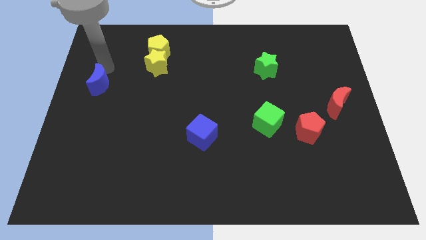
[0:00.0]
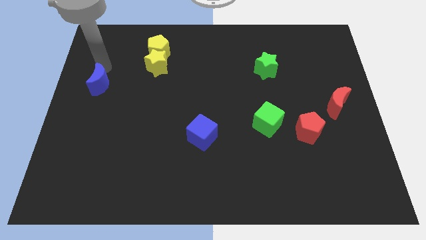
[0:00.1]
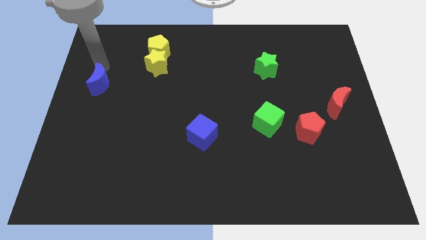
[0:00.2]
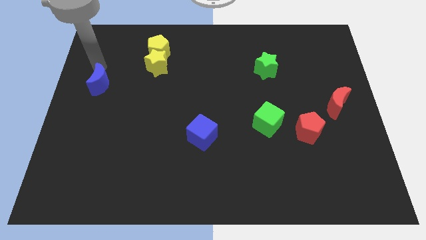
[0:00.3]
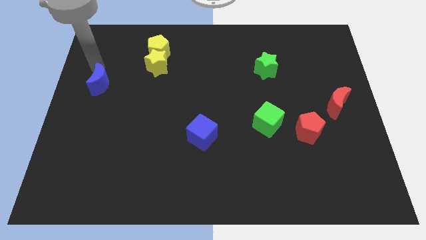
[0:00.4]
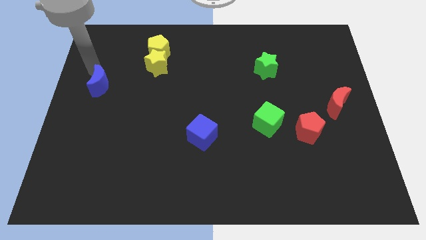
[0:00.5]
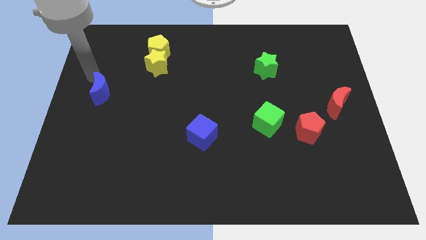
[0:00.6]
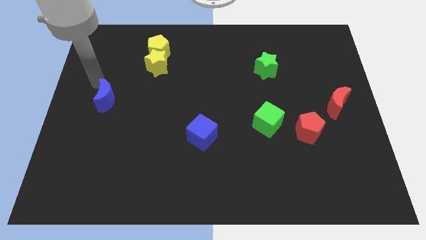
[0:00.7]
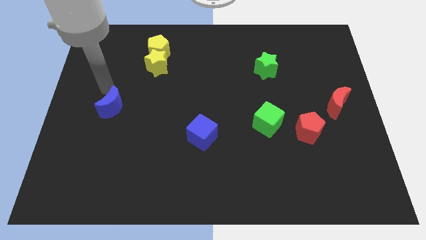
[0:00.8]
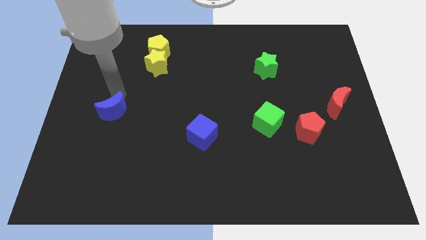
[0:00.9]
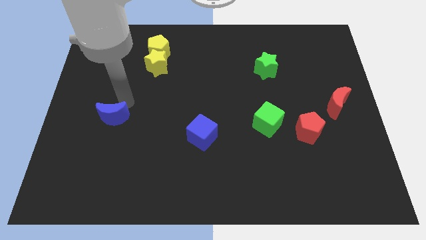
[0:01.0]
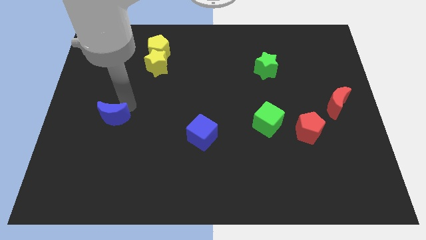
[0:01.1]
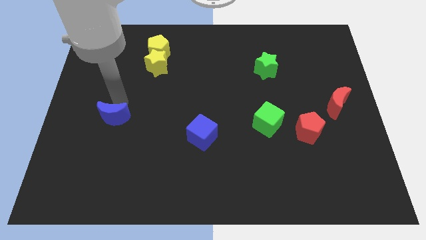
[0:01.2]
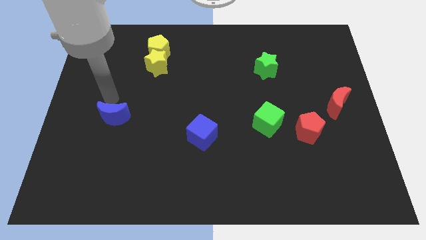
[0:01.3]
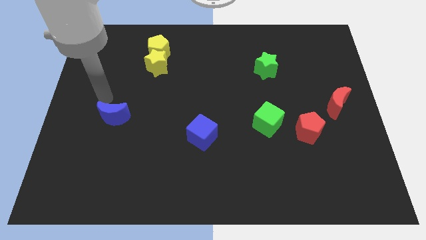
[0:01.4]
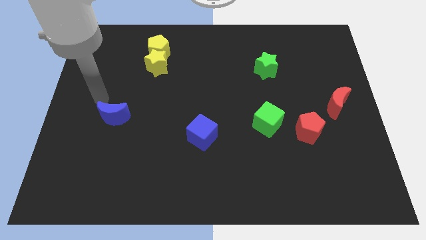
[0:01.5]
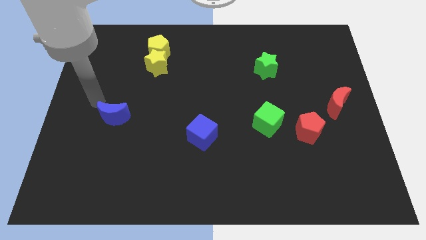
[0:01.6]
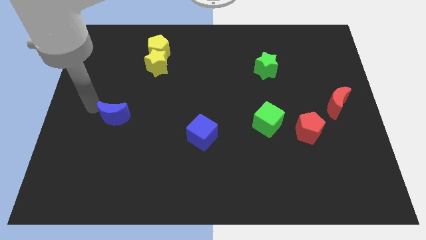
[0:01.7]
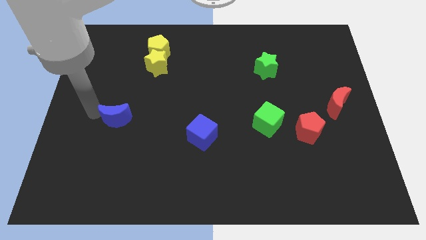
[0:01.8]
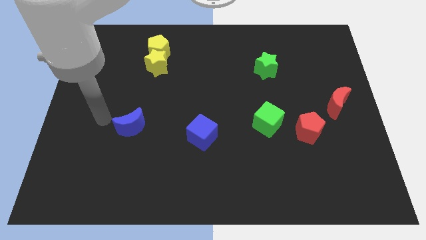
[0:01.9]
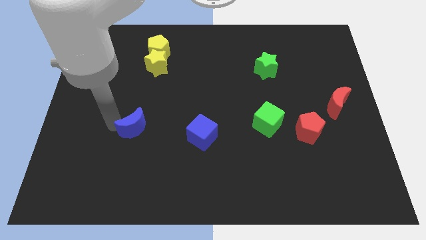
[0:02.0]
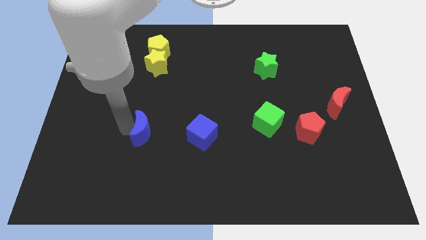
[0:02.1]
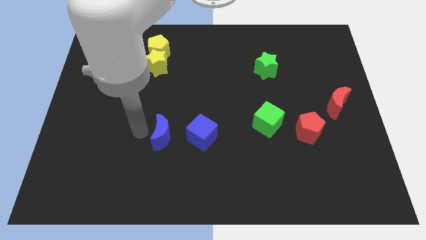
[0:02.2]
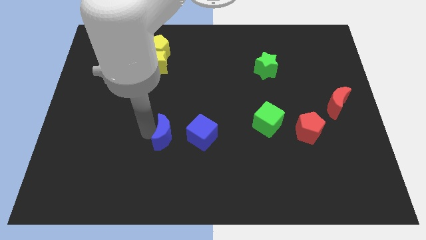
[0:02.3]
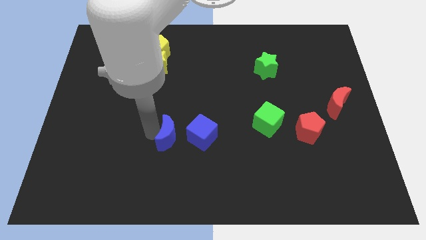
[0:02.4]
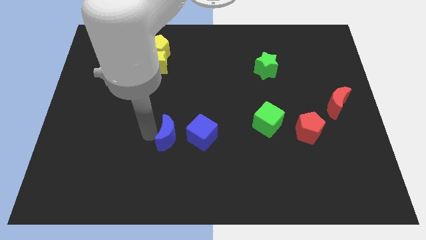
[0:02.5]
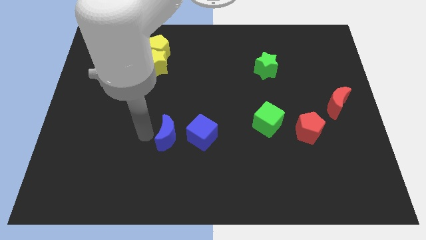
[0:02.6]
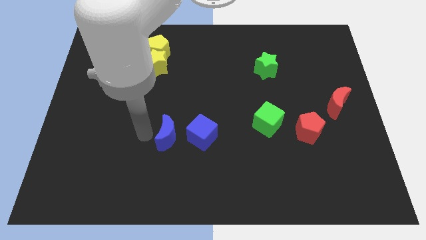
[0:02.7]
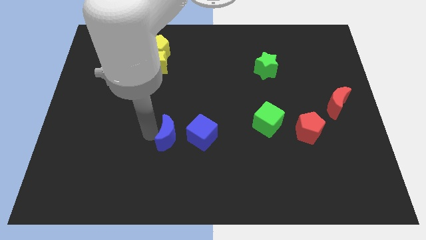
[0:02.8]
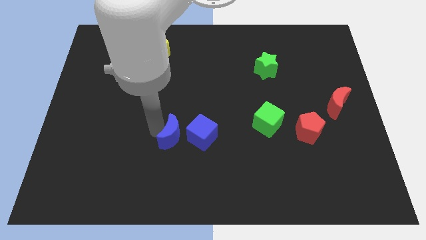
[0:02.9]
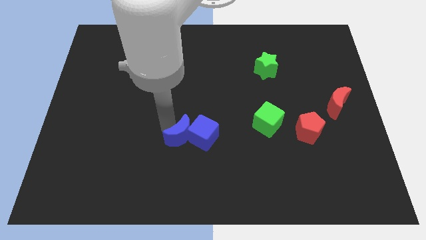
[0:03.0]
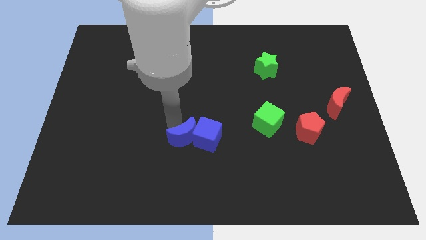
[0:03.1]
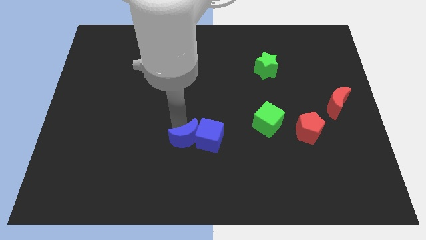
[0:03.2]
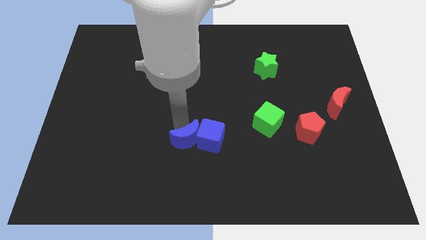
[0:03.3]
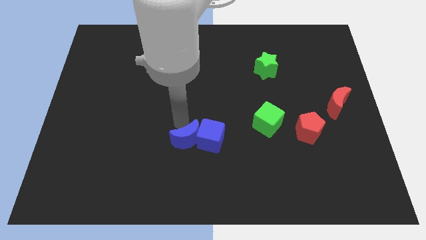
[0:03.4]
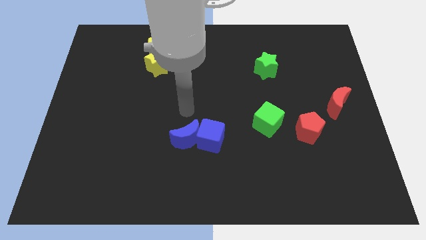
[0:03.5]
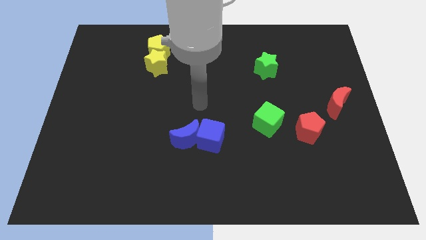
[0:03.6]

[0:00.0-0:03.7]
push the blue crescent into the blue cube

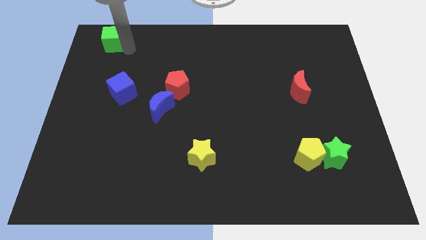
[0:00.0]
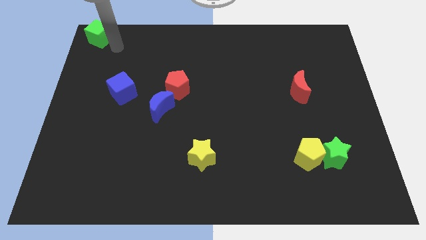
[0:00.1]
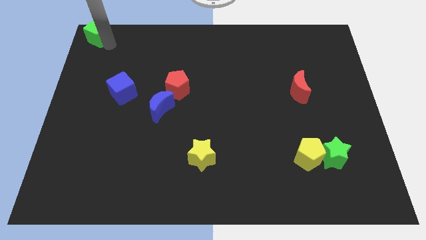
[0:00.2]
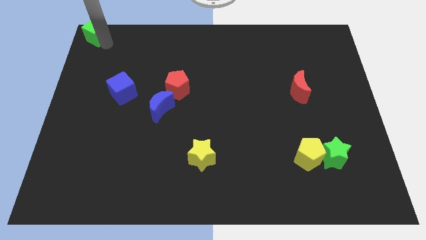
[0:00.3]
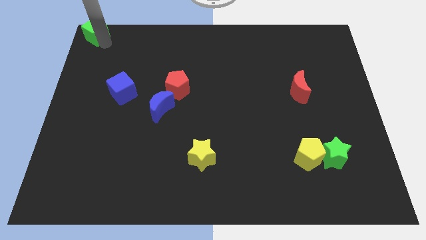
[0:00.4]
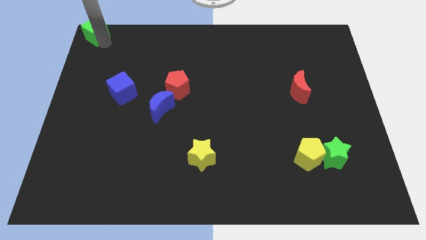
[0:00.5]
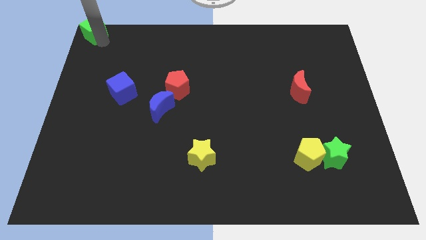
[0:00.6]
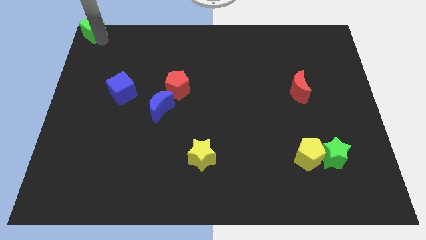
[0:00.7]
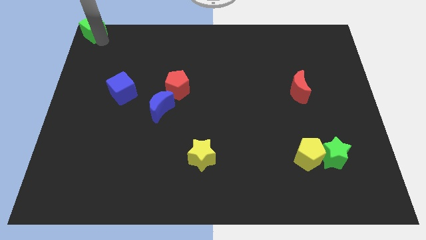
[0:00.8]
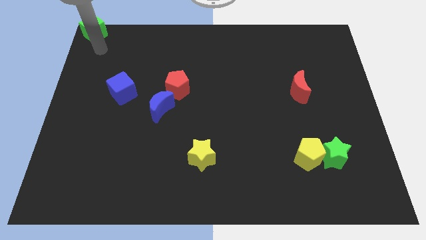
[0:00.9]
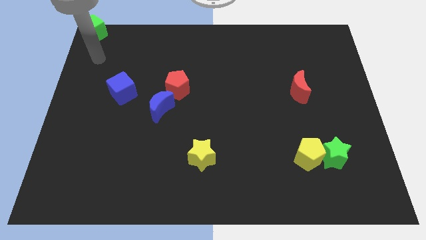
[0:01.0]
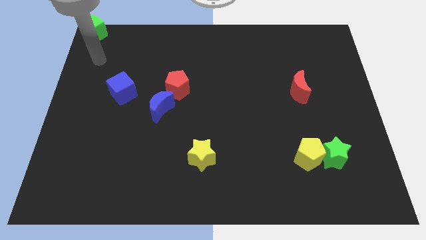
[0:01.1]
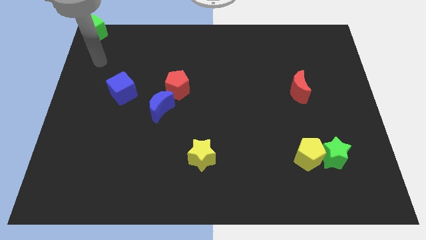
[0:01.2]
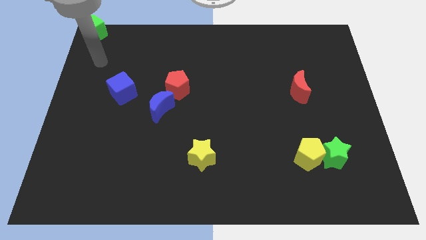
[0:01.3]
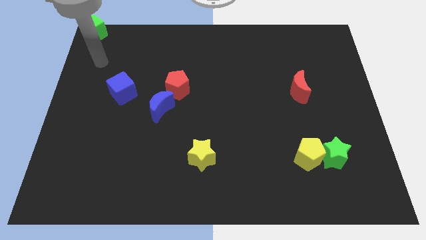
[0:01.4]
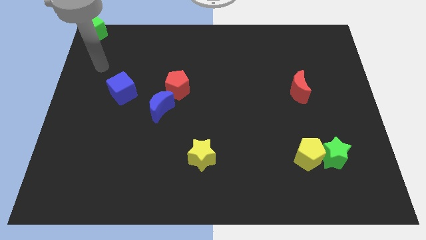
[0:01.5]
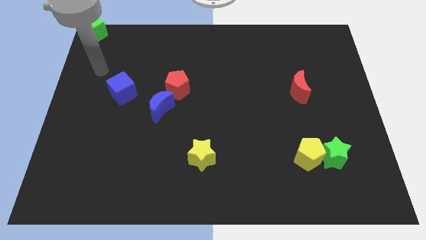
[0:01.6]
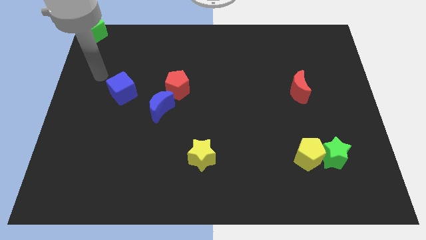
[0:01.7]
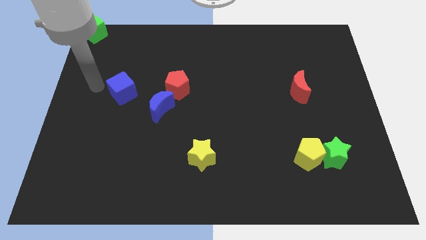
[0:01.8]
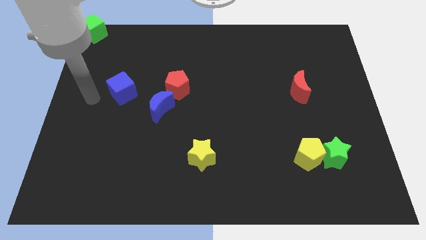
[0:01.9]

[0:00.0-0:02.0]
move green cube to the top left corner of the board

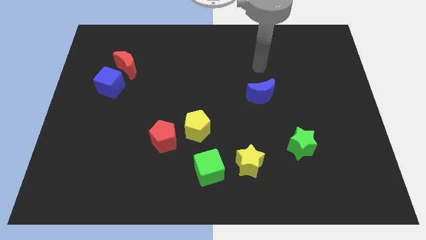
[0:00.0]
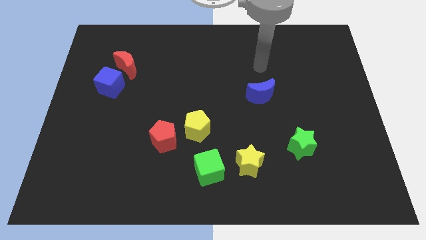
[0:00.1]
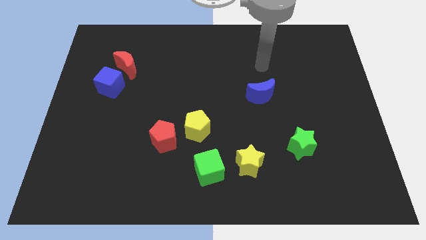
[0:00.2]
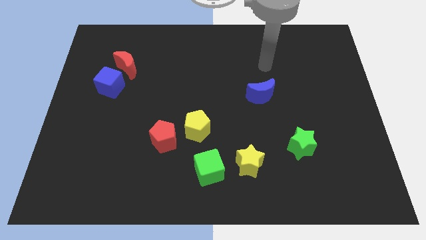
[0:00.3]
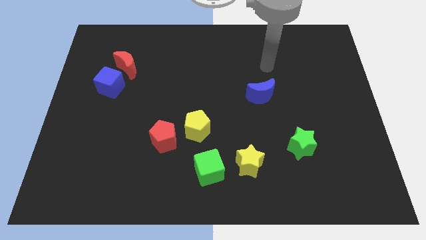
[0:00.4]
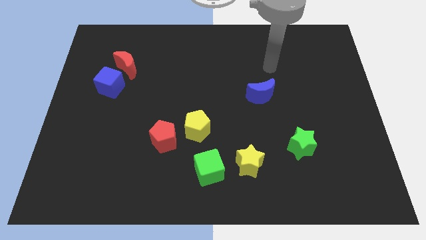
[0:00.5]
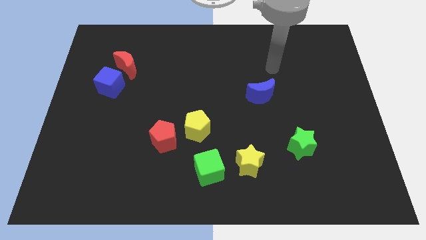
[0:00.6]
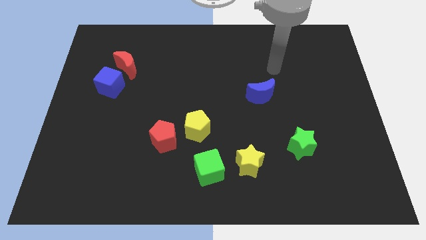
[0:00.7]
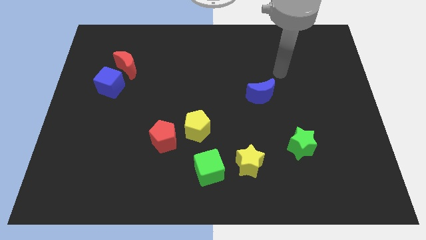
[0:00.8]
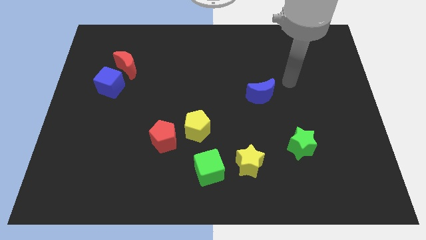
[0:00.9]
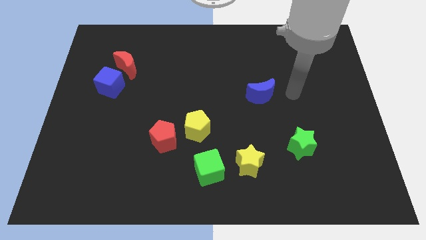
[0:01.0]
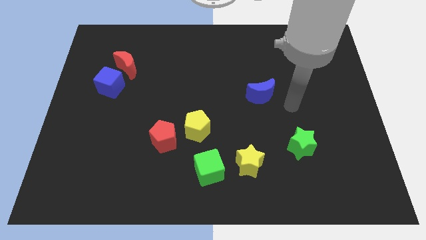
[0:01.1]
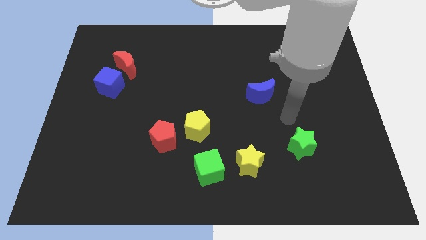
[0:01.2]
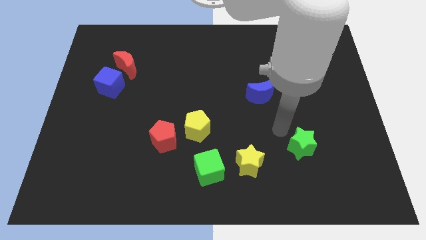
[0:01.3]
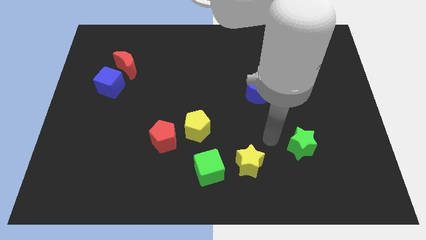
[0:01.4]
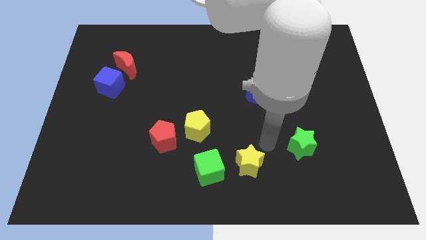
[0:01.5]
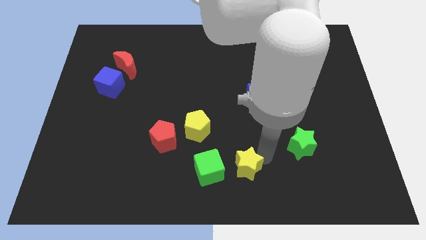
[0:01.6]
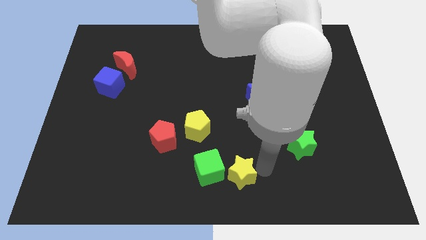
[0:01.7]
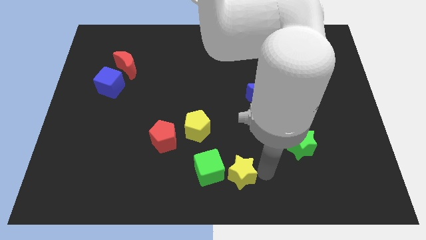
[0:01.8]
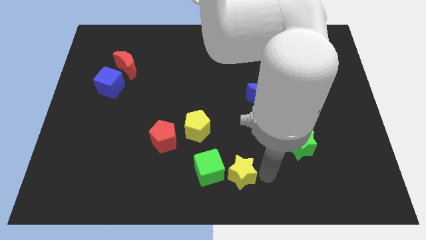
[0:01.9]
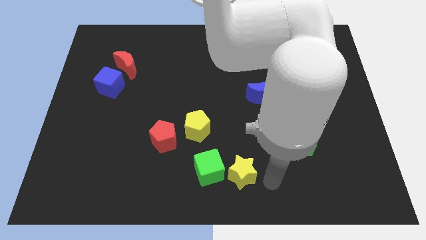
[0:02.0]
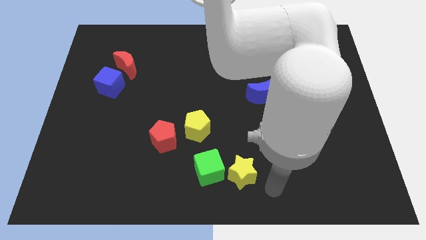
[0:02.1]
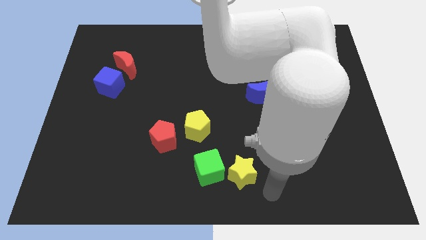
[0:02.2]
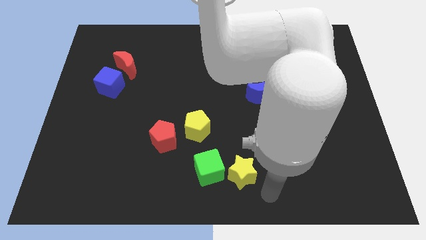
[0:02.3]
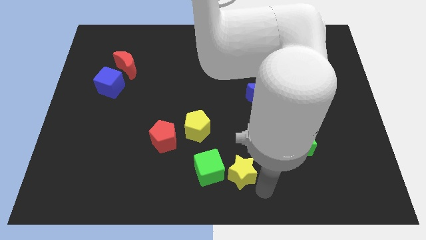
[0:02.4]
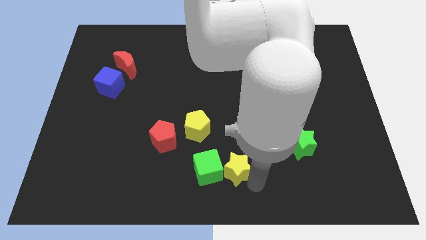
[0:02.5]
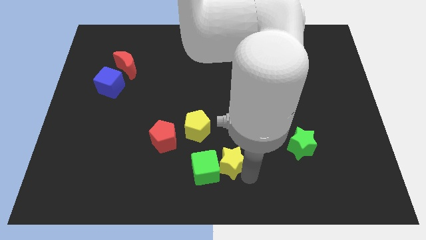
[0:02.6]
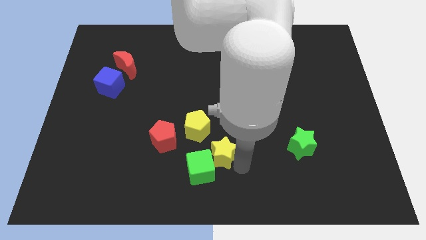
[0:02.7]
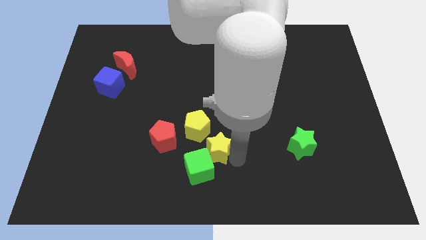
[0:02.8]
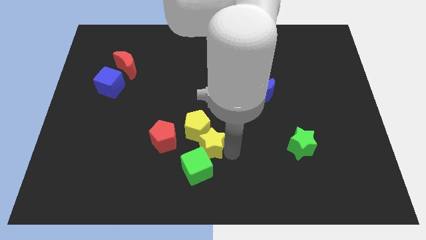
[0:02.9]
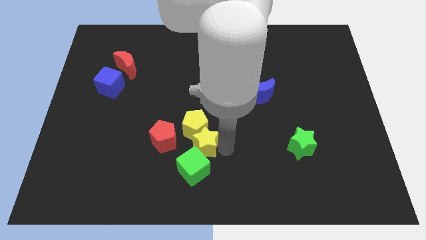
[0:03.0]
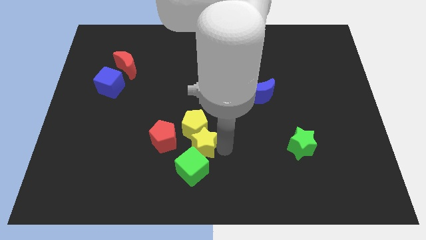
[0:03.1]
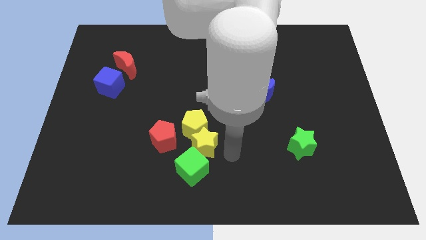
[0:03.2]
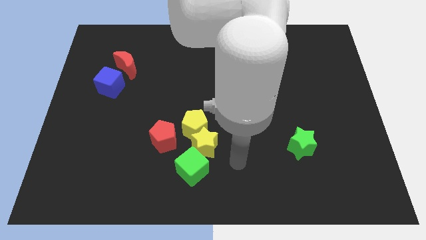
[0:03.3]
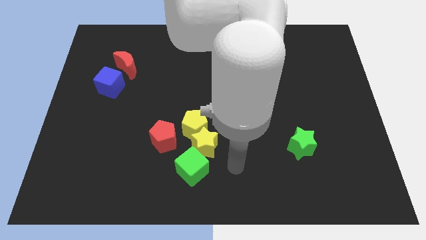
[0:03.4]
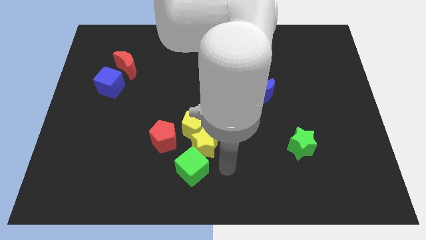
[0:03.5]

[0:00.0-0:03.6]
move the yellow star above the green cube
